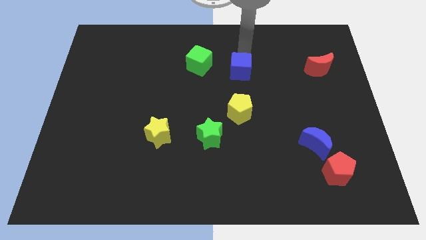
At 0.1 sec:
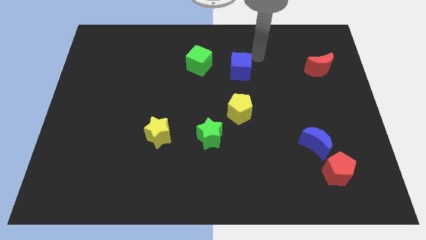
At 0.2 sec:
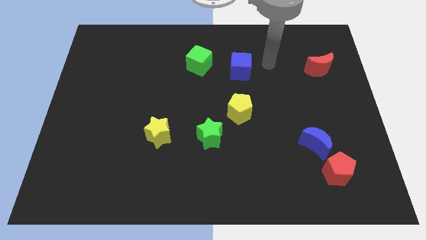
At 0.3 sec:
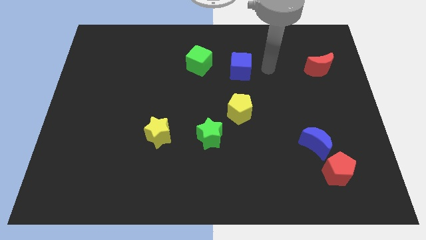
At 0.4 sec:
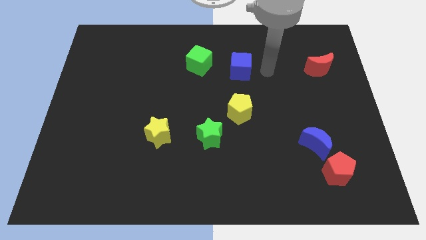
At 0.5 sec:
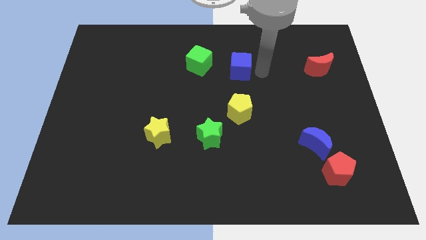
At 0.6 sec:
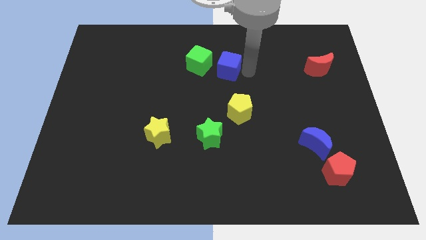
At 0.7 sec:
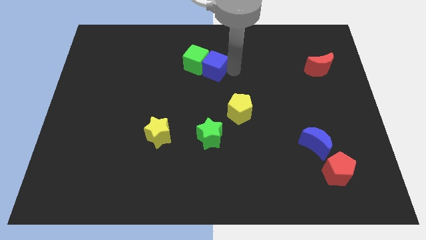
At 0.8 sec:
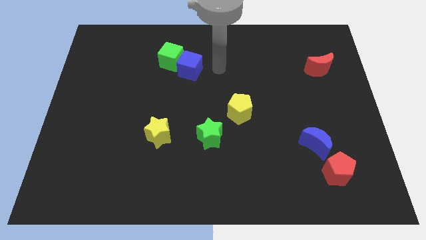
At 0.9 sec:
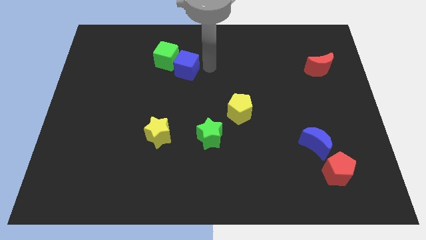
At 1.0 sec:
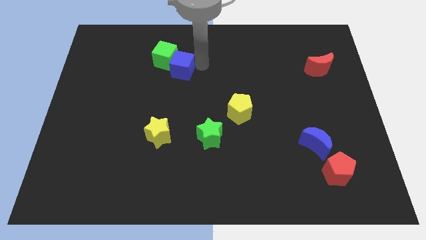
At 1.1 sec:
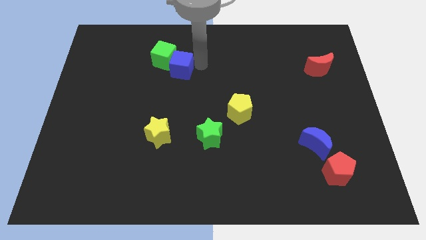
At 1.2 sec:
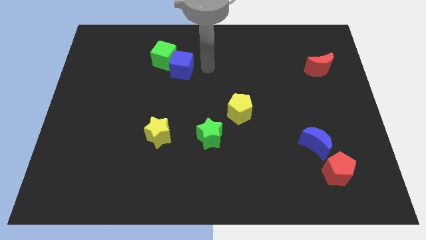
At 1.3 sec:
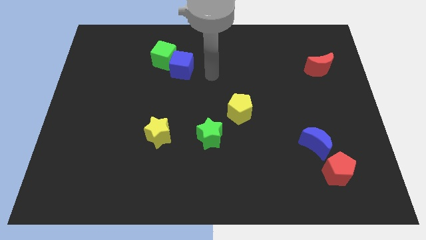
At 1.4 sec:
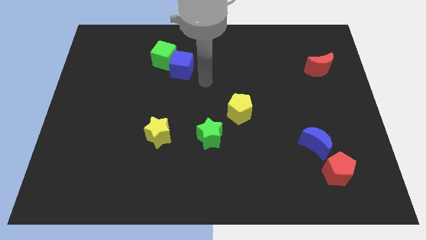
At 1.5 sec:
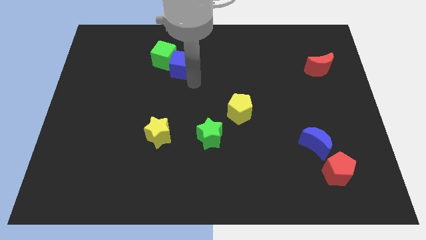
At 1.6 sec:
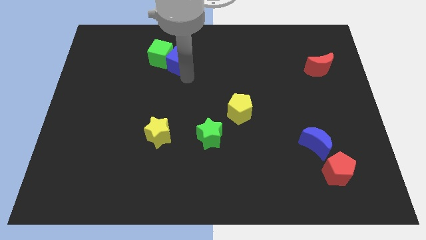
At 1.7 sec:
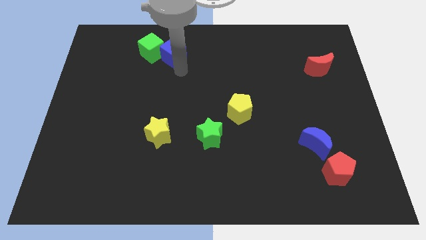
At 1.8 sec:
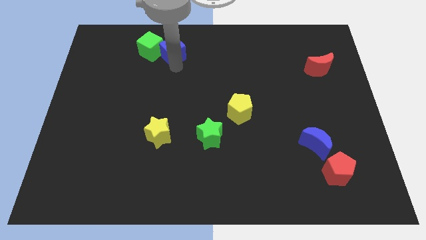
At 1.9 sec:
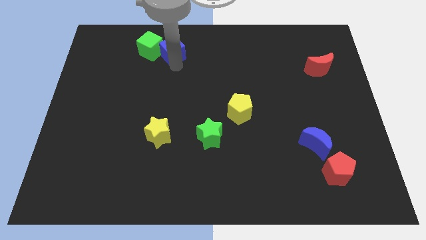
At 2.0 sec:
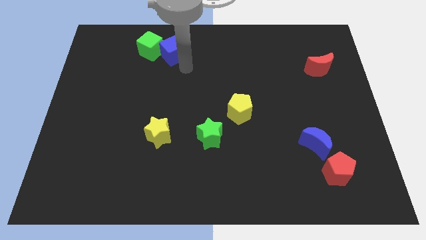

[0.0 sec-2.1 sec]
push the blue cube into green cube towards left

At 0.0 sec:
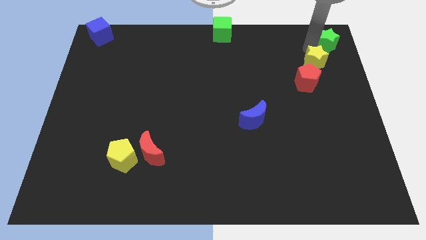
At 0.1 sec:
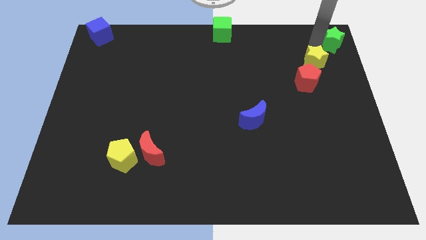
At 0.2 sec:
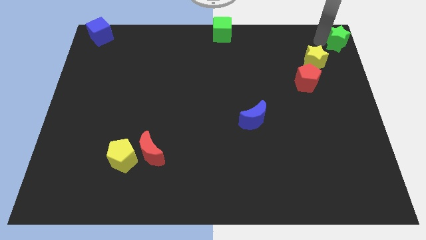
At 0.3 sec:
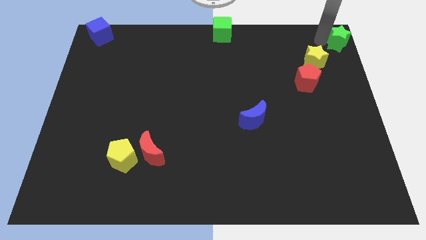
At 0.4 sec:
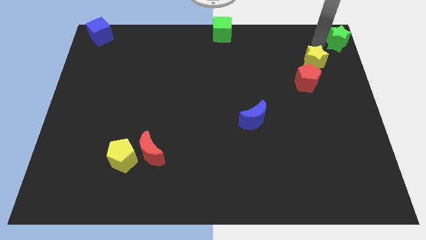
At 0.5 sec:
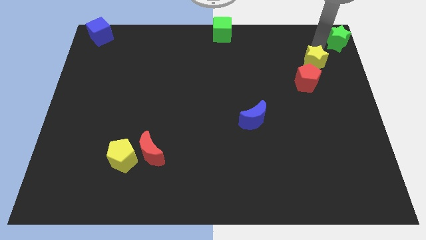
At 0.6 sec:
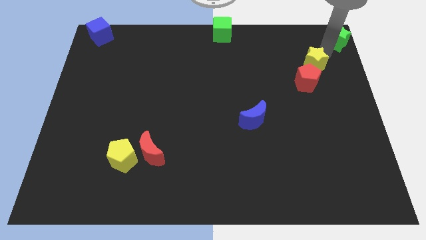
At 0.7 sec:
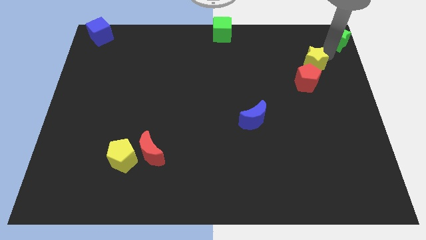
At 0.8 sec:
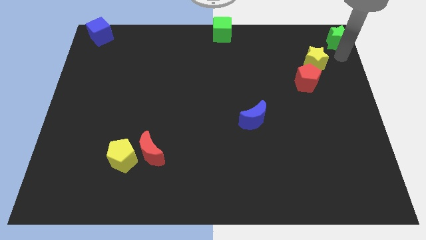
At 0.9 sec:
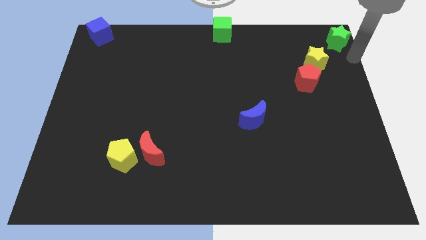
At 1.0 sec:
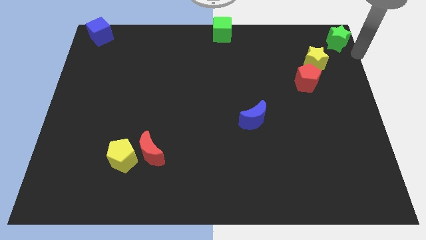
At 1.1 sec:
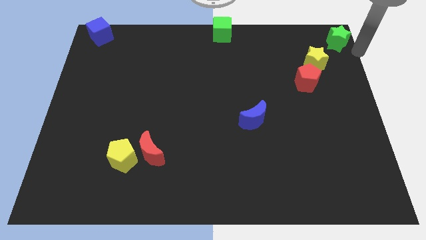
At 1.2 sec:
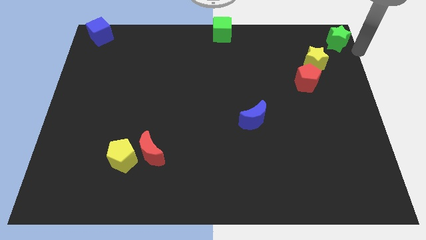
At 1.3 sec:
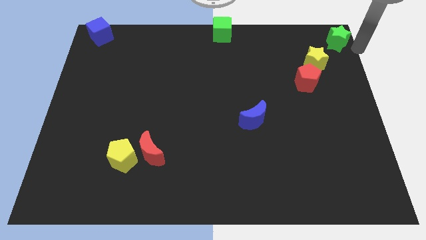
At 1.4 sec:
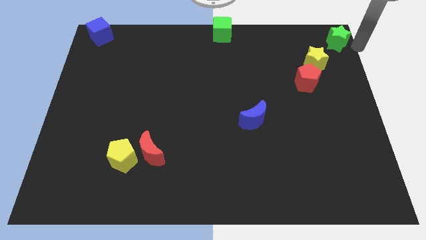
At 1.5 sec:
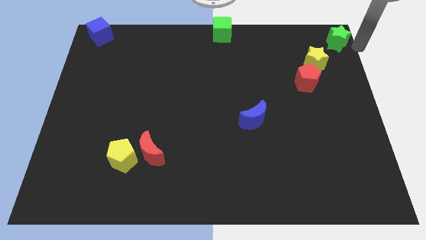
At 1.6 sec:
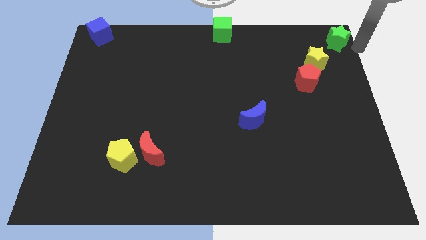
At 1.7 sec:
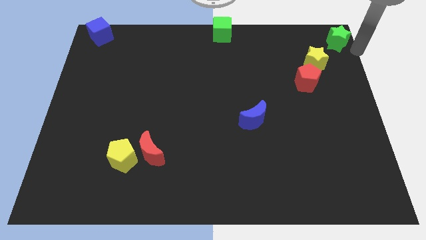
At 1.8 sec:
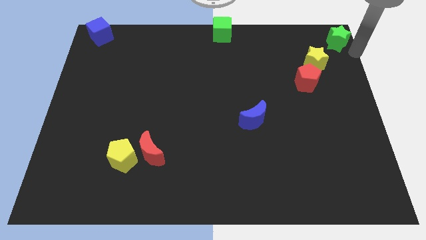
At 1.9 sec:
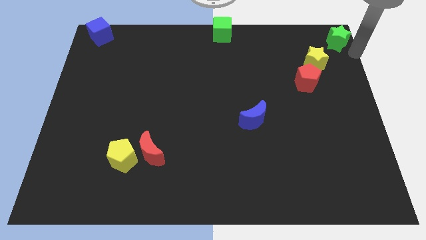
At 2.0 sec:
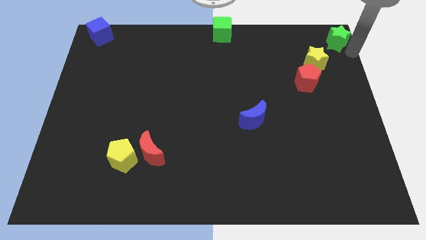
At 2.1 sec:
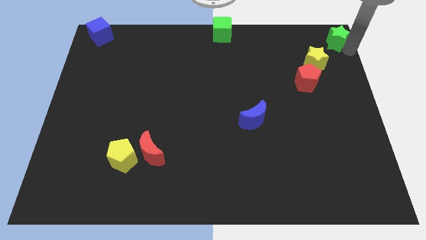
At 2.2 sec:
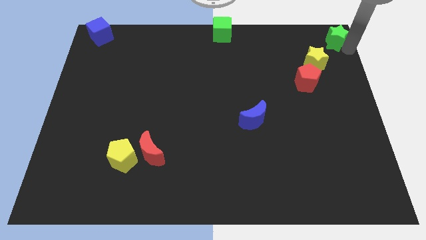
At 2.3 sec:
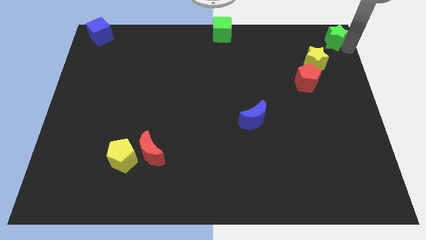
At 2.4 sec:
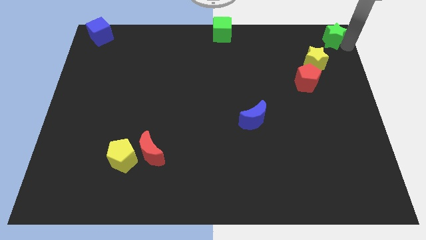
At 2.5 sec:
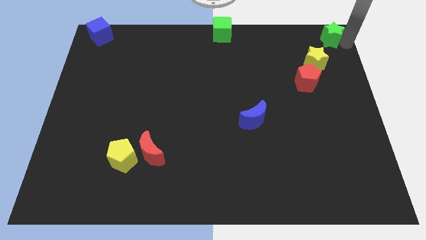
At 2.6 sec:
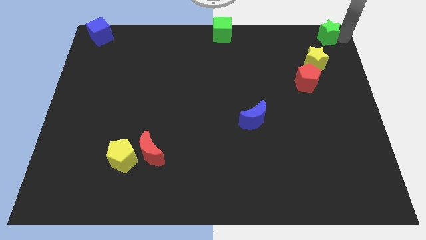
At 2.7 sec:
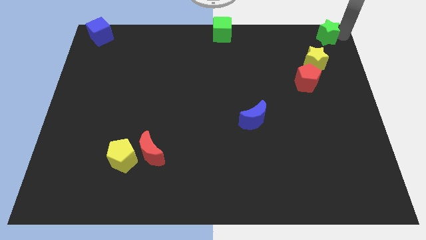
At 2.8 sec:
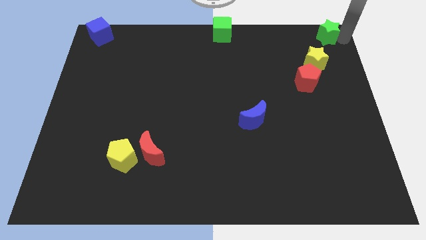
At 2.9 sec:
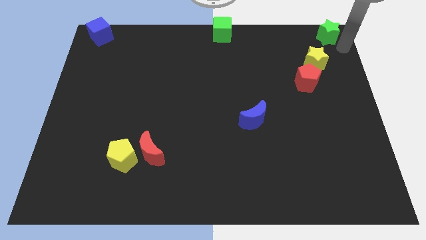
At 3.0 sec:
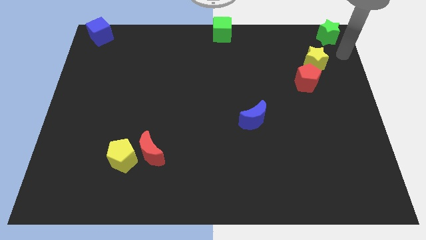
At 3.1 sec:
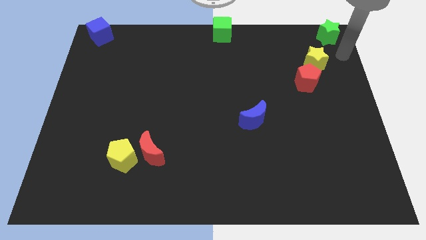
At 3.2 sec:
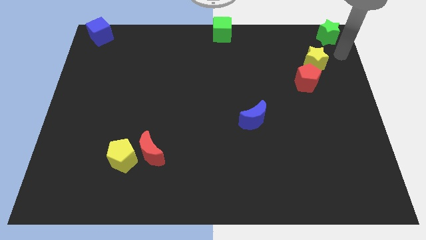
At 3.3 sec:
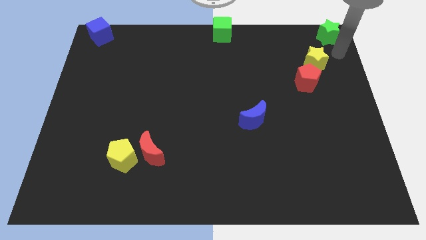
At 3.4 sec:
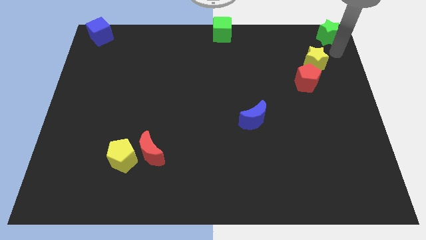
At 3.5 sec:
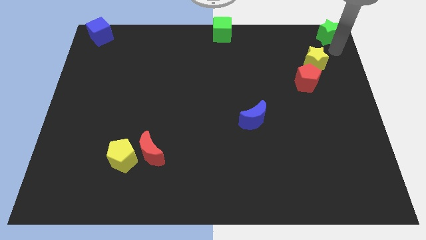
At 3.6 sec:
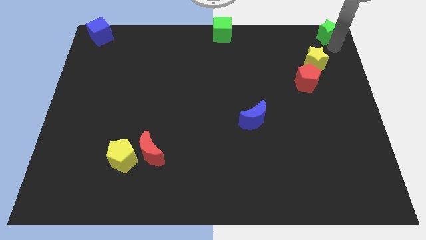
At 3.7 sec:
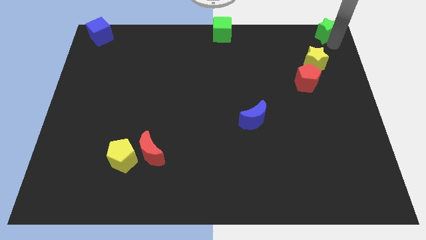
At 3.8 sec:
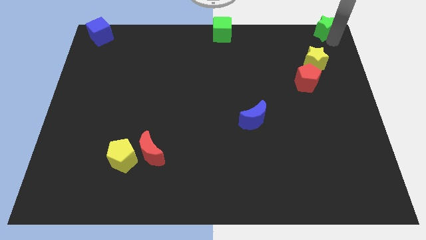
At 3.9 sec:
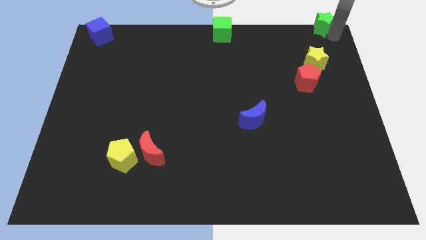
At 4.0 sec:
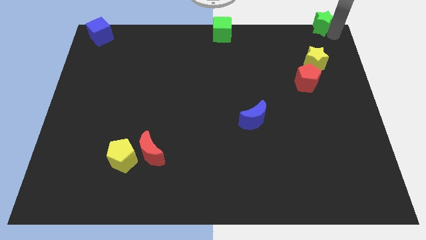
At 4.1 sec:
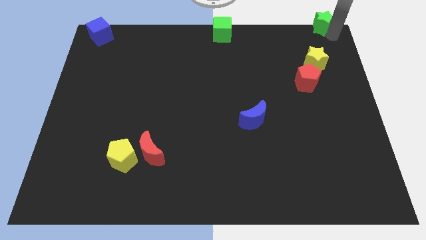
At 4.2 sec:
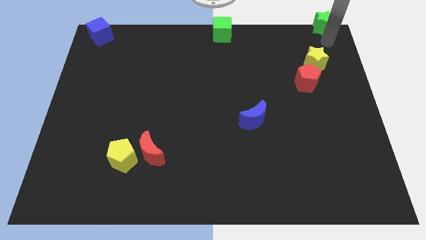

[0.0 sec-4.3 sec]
place green star towards top right end

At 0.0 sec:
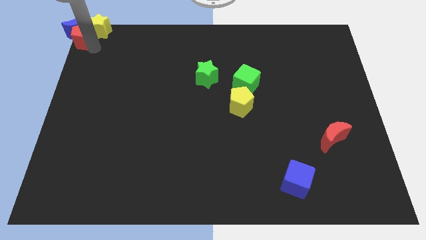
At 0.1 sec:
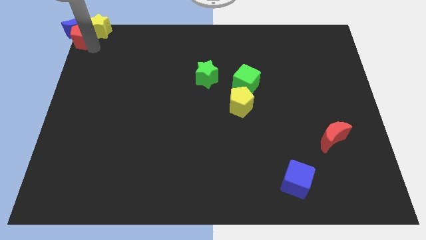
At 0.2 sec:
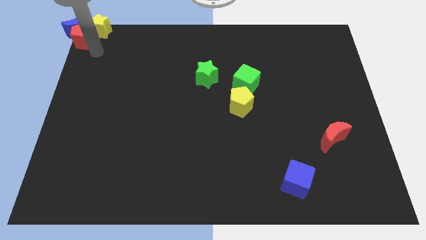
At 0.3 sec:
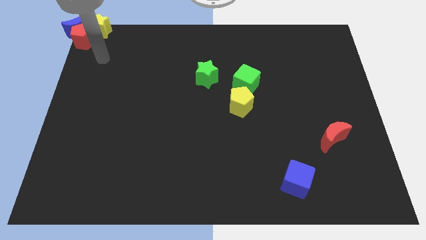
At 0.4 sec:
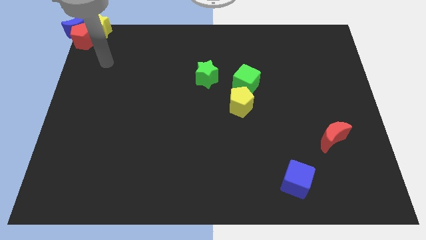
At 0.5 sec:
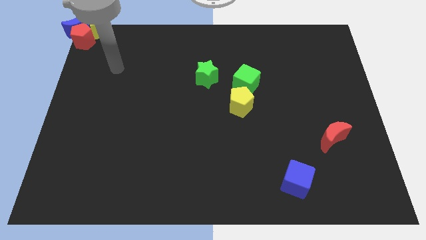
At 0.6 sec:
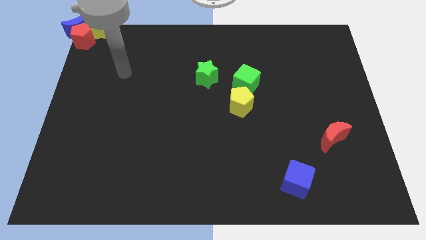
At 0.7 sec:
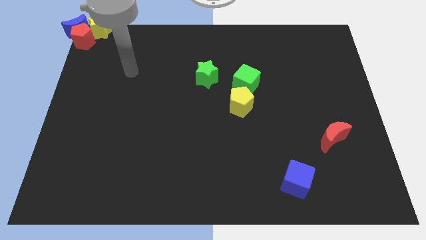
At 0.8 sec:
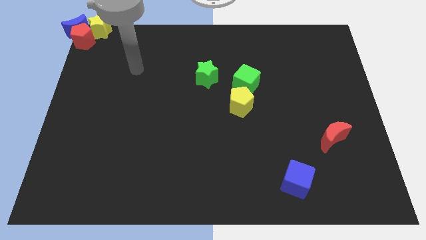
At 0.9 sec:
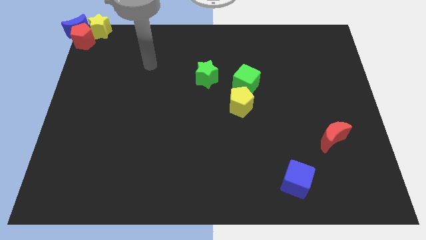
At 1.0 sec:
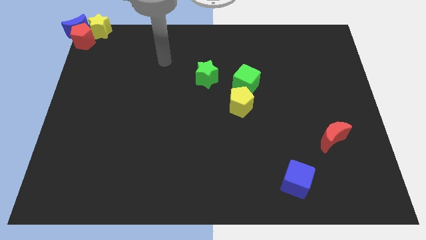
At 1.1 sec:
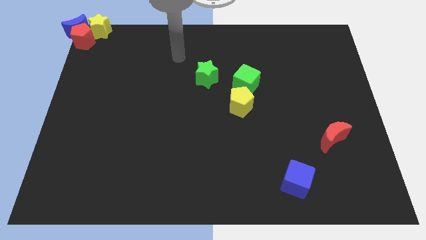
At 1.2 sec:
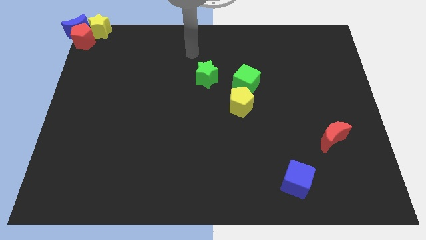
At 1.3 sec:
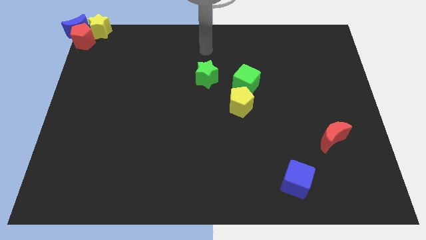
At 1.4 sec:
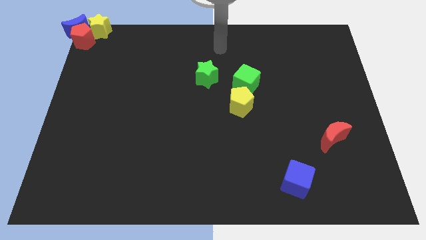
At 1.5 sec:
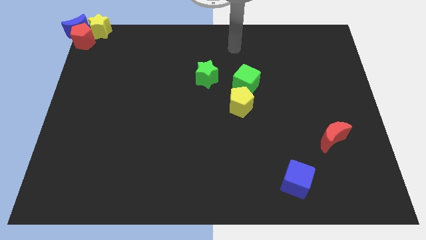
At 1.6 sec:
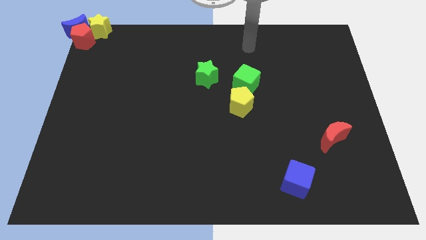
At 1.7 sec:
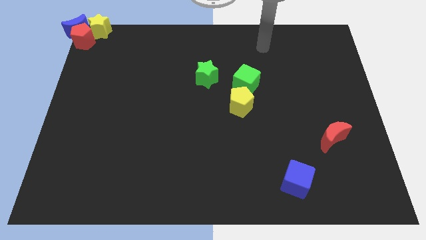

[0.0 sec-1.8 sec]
move the arm away from the red pentagon

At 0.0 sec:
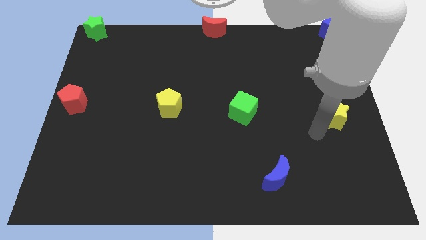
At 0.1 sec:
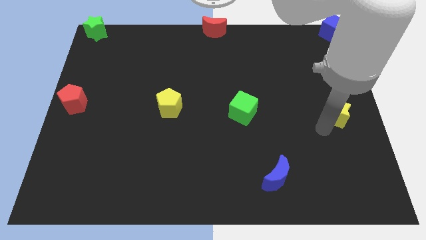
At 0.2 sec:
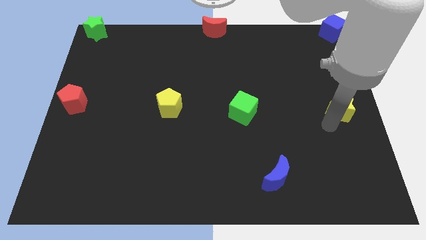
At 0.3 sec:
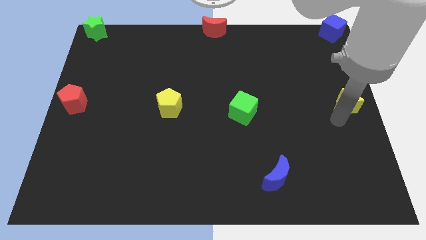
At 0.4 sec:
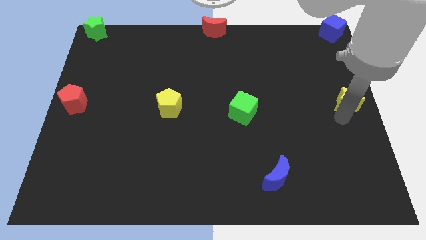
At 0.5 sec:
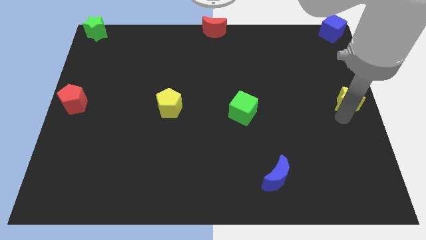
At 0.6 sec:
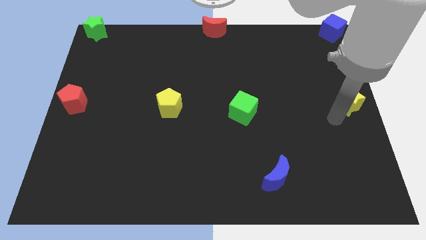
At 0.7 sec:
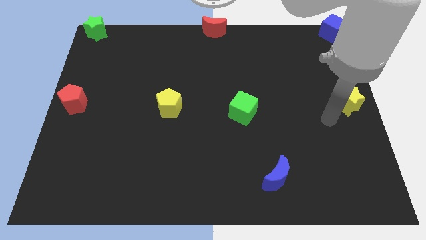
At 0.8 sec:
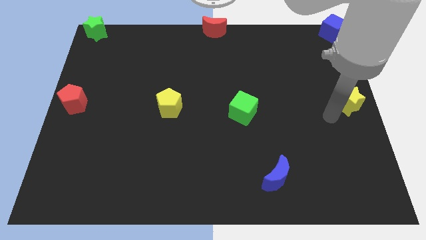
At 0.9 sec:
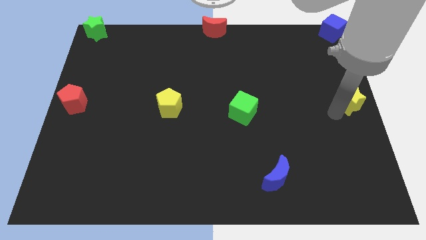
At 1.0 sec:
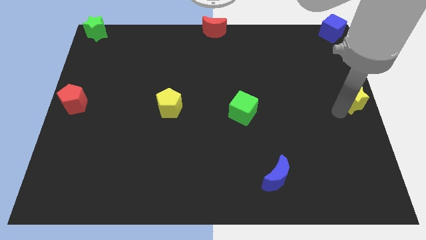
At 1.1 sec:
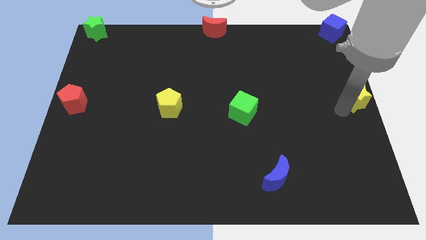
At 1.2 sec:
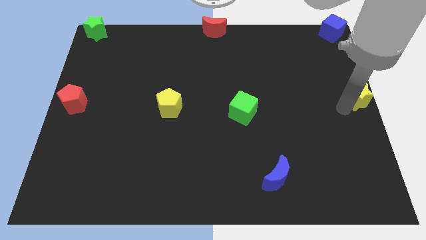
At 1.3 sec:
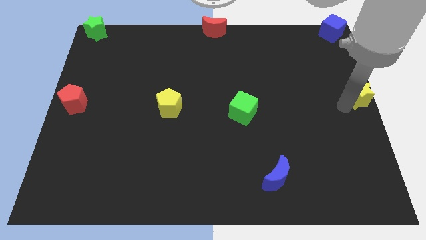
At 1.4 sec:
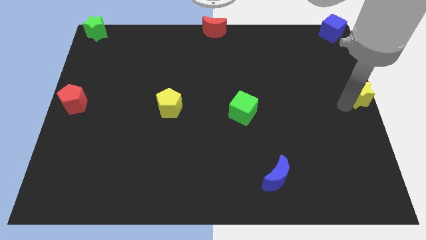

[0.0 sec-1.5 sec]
drag the yellow star at the center right side of the board
